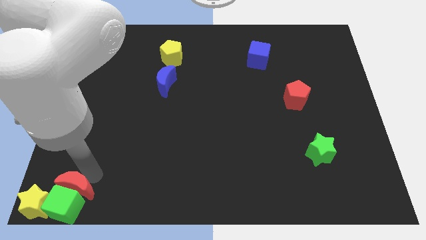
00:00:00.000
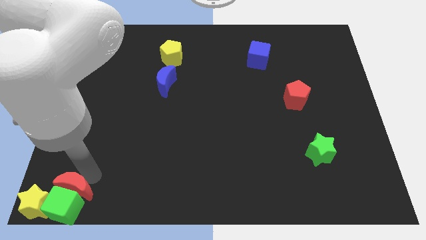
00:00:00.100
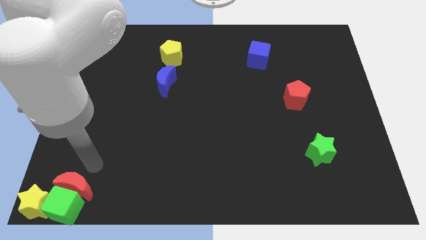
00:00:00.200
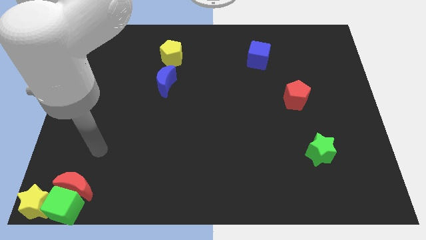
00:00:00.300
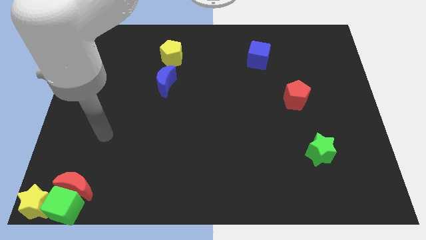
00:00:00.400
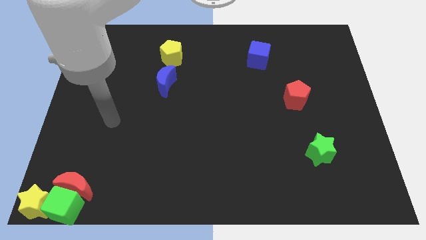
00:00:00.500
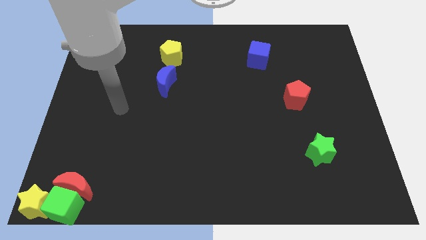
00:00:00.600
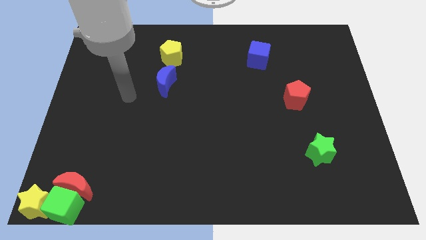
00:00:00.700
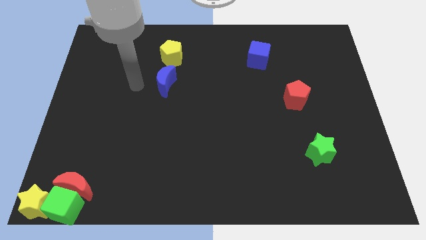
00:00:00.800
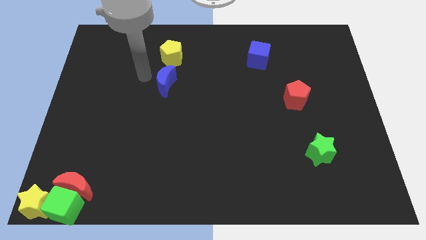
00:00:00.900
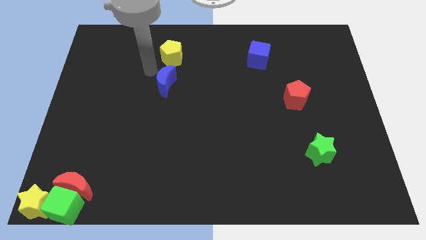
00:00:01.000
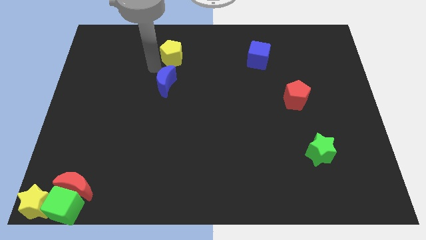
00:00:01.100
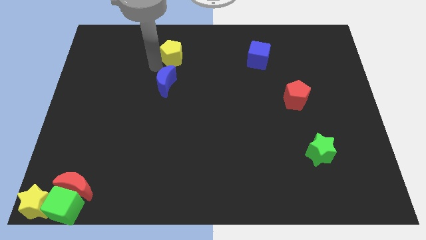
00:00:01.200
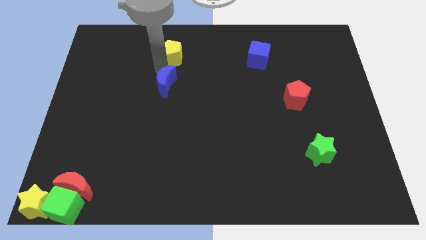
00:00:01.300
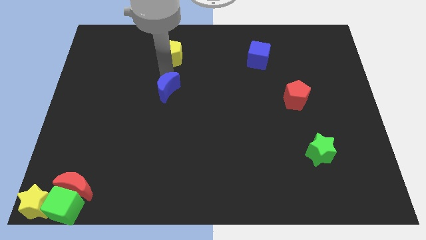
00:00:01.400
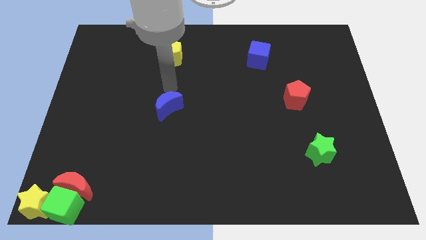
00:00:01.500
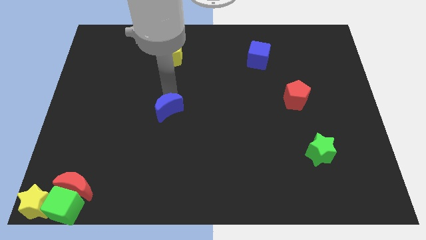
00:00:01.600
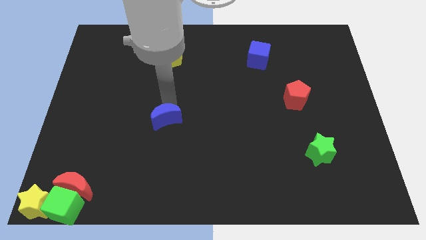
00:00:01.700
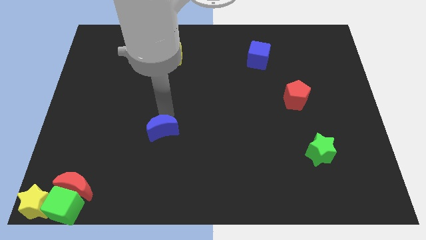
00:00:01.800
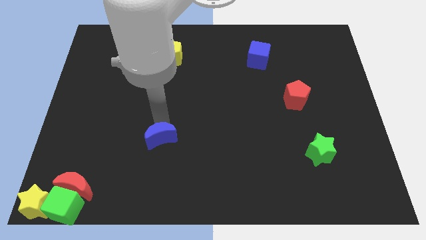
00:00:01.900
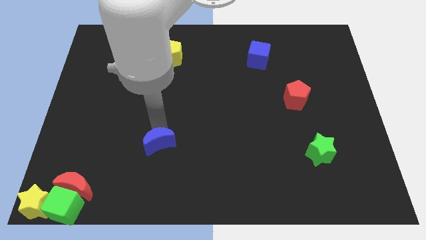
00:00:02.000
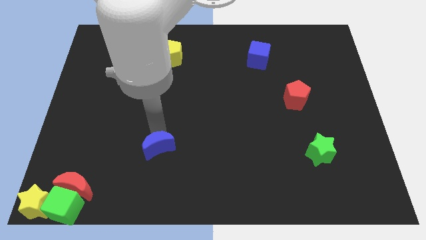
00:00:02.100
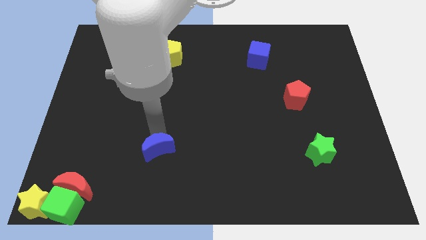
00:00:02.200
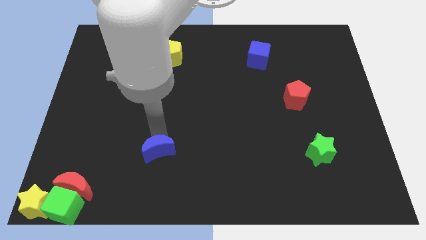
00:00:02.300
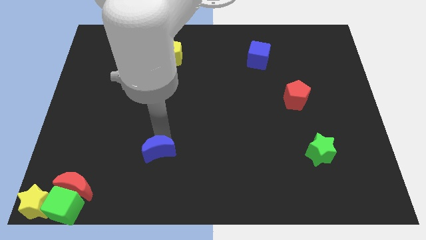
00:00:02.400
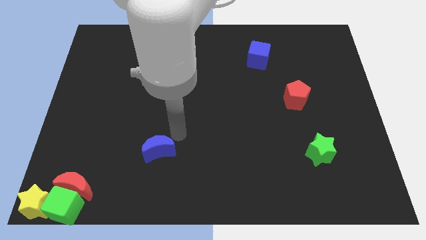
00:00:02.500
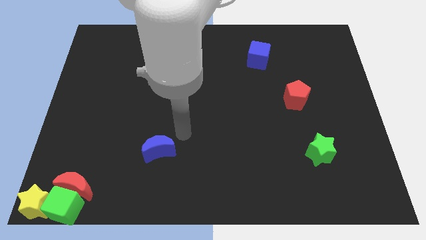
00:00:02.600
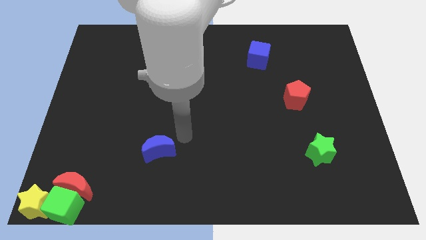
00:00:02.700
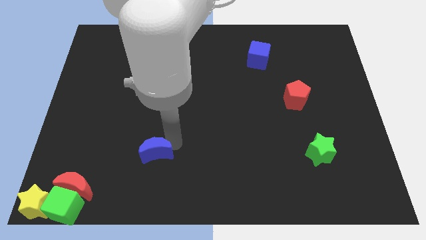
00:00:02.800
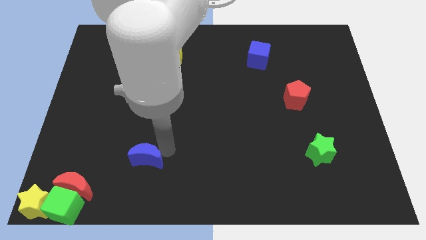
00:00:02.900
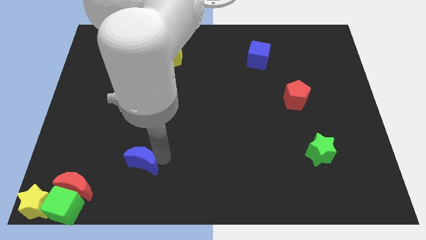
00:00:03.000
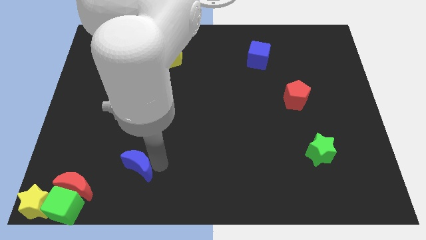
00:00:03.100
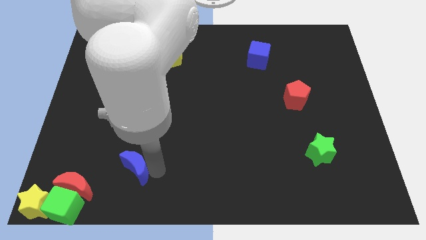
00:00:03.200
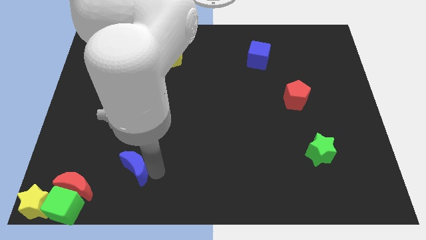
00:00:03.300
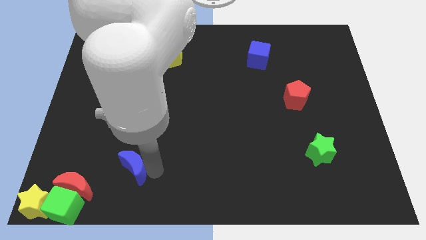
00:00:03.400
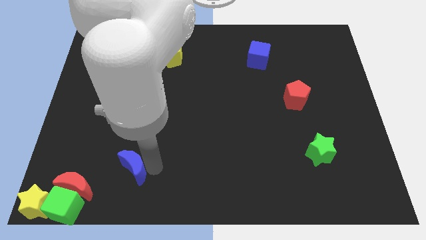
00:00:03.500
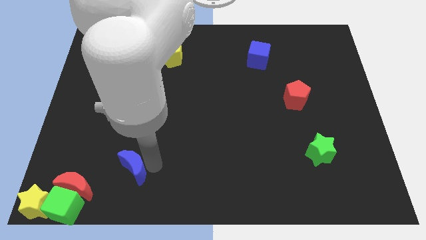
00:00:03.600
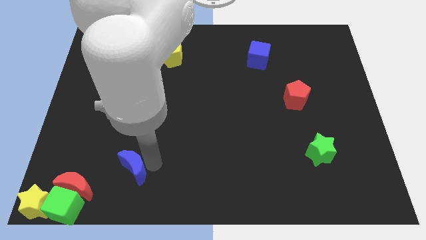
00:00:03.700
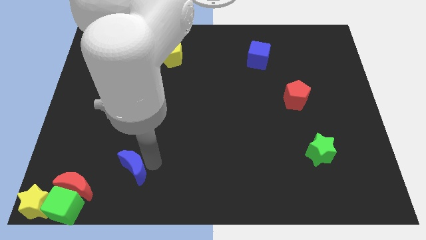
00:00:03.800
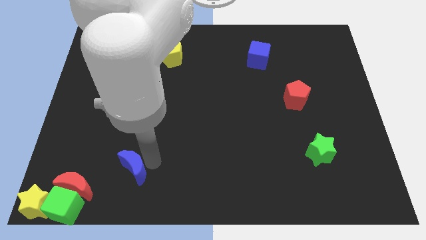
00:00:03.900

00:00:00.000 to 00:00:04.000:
move the blue crescent towards red crescent

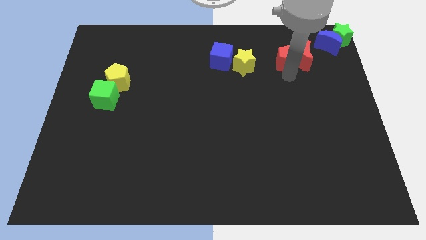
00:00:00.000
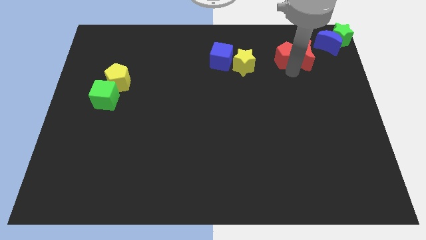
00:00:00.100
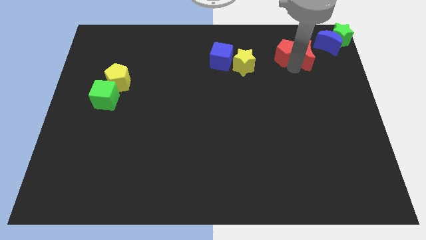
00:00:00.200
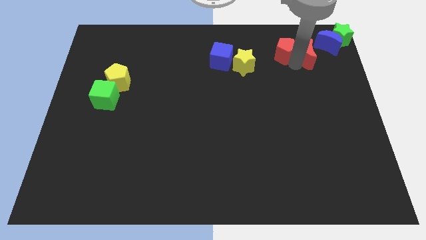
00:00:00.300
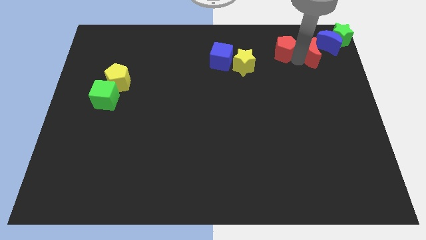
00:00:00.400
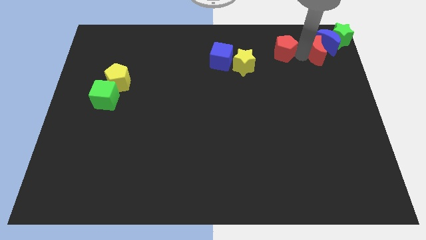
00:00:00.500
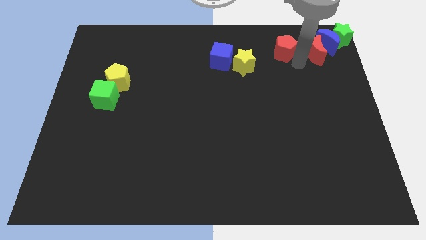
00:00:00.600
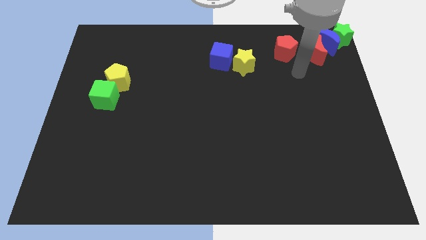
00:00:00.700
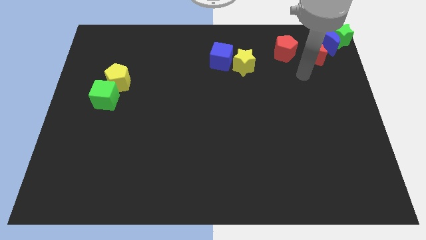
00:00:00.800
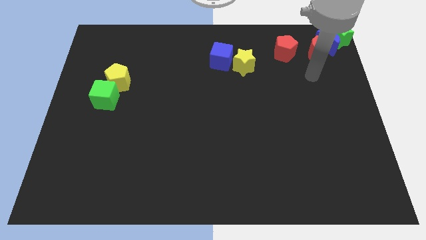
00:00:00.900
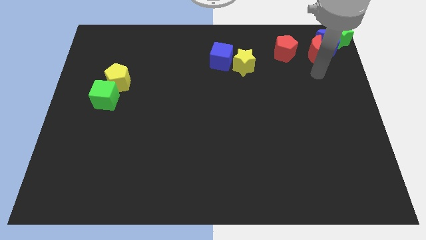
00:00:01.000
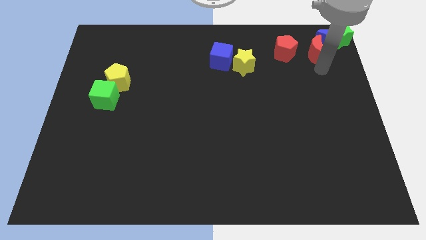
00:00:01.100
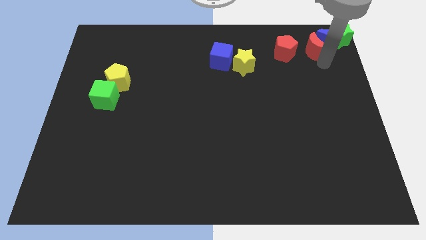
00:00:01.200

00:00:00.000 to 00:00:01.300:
separate the red pentagon and red crescent

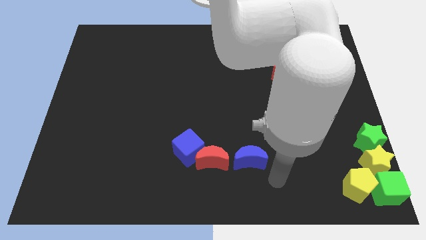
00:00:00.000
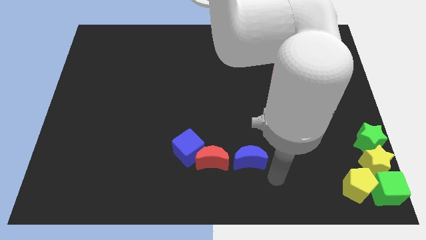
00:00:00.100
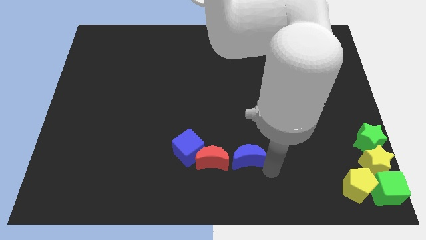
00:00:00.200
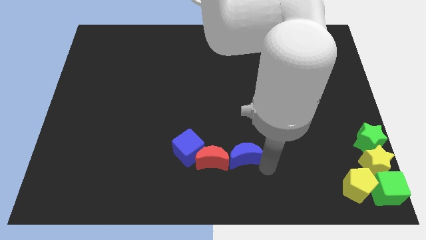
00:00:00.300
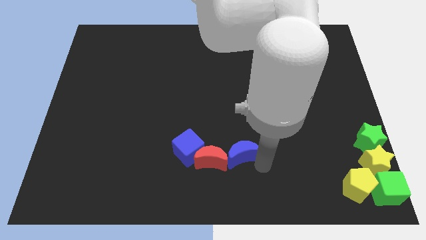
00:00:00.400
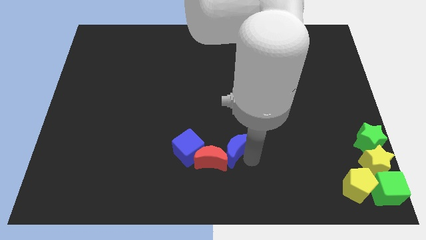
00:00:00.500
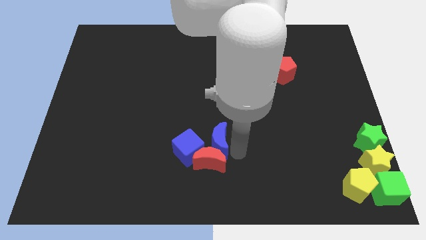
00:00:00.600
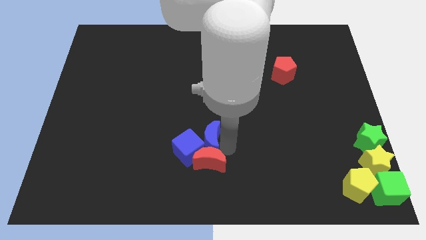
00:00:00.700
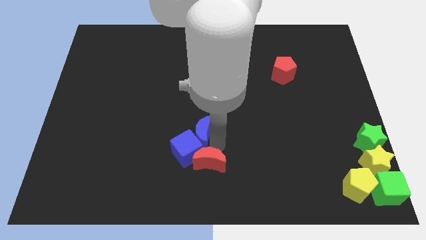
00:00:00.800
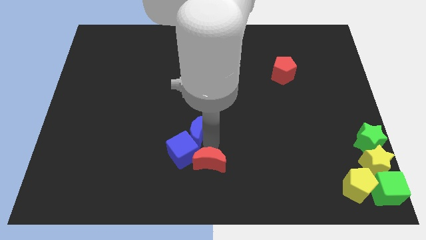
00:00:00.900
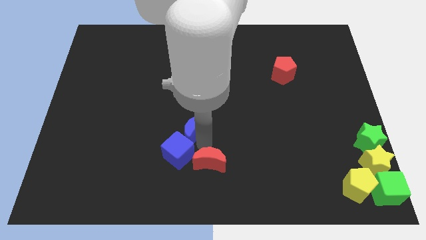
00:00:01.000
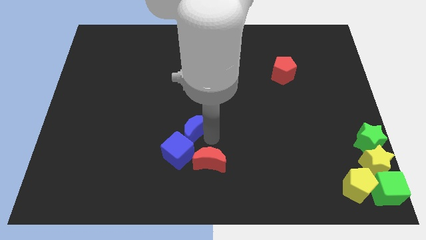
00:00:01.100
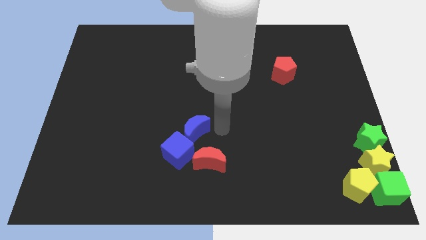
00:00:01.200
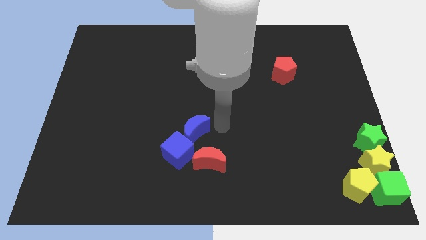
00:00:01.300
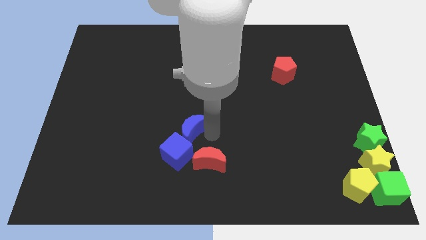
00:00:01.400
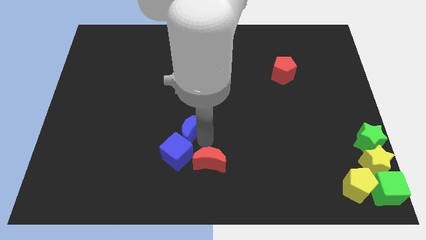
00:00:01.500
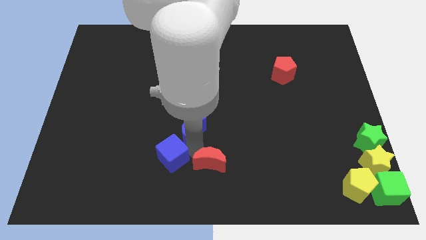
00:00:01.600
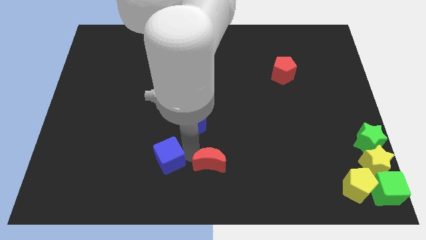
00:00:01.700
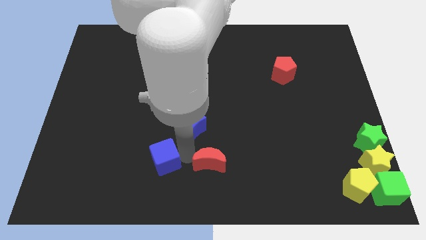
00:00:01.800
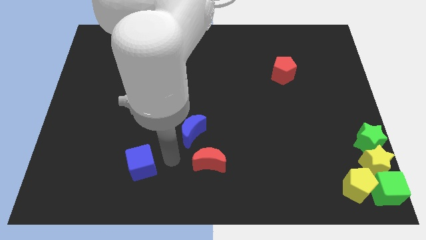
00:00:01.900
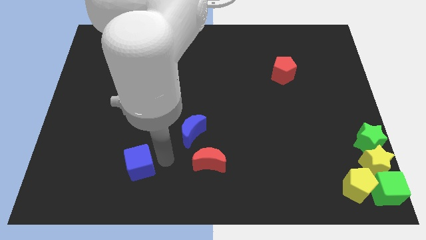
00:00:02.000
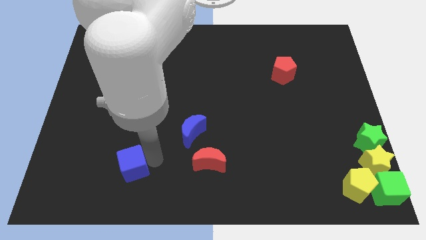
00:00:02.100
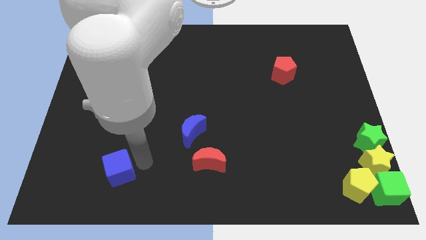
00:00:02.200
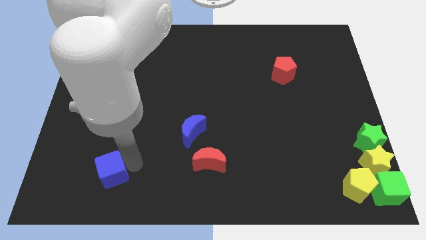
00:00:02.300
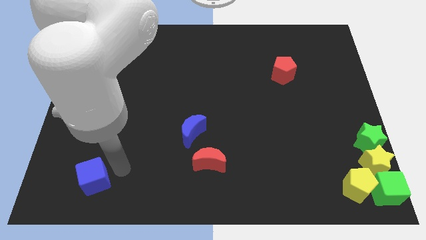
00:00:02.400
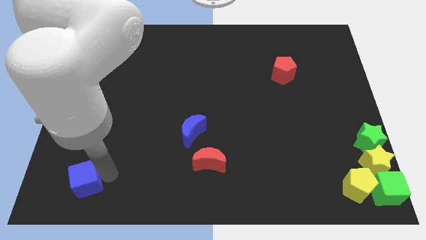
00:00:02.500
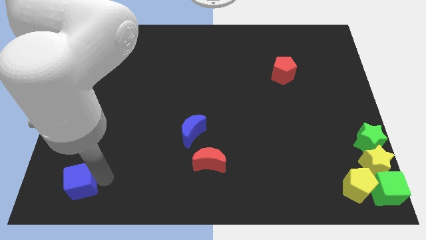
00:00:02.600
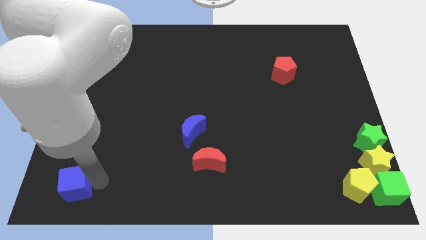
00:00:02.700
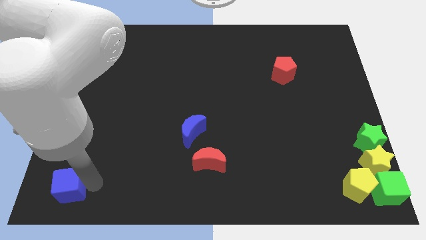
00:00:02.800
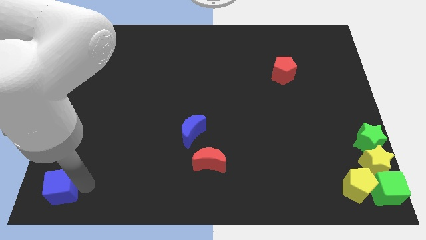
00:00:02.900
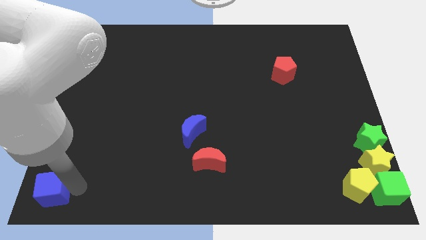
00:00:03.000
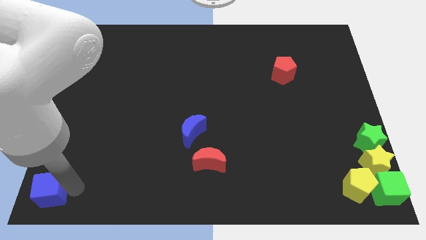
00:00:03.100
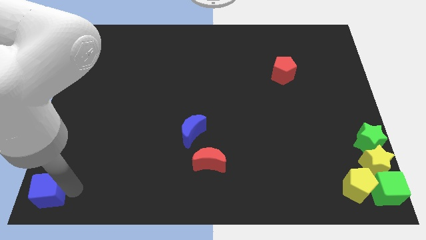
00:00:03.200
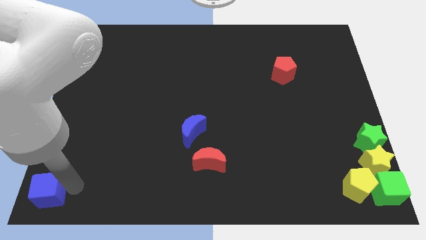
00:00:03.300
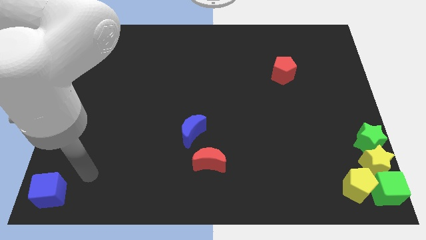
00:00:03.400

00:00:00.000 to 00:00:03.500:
place the blue cube at the bottom left corner of the board

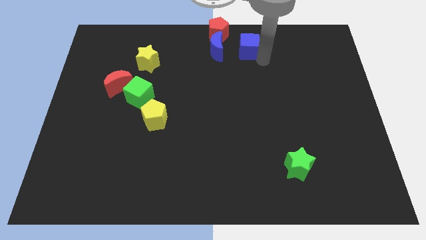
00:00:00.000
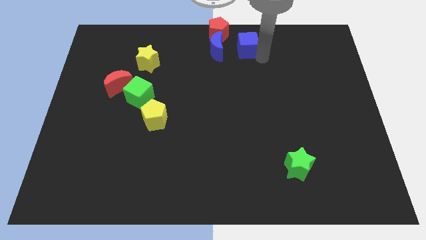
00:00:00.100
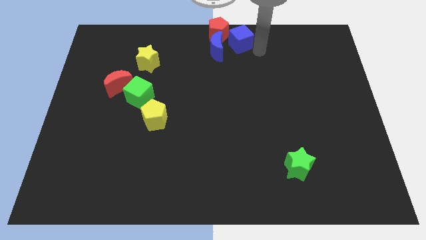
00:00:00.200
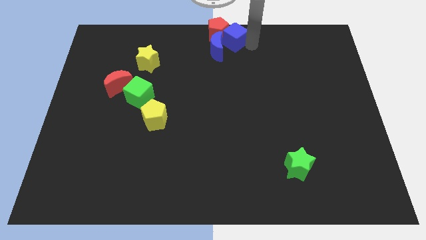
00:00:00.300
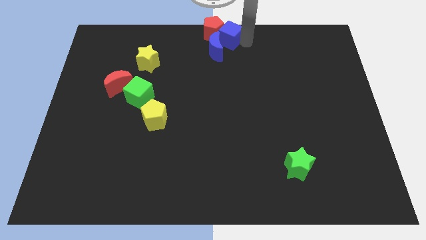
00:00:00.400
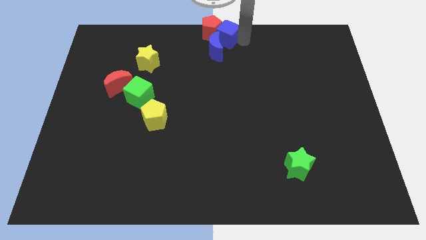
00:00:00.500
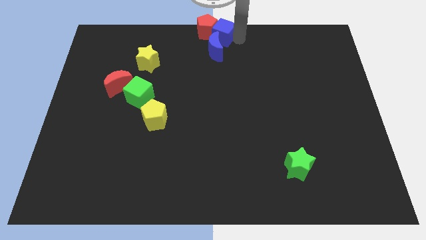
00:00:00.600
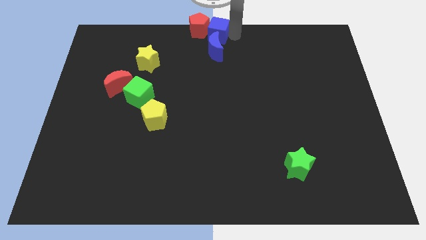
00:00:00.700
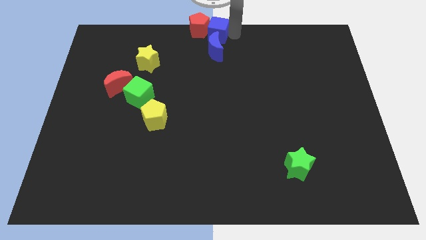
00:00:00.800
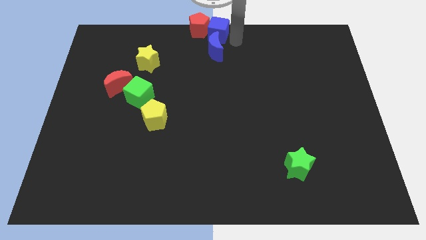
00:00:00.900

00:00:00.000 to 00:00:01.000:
push the blue cube into the red pentagon
